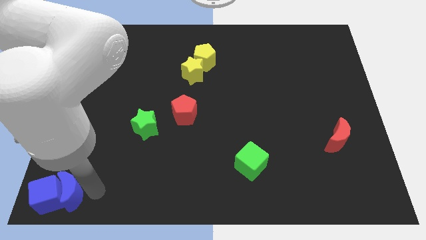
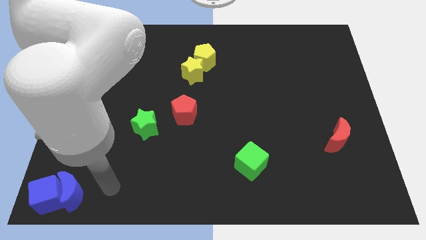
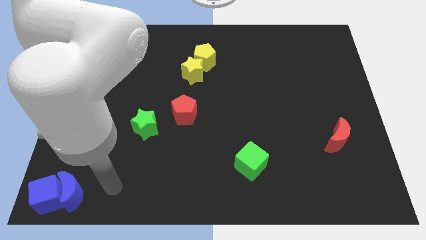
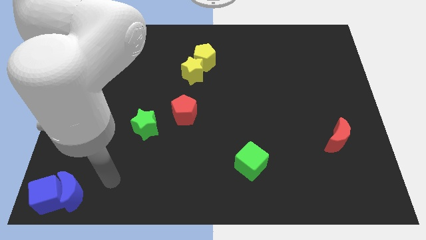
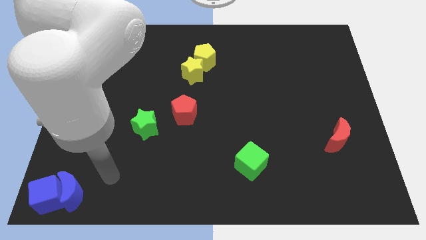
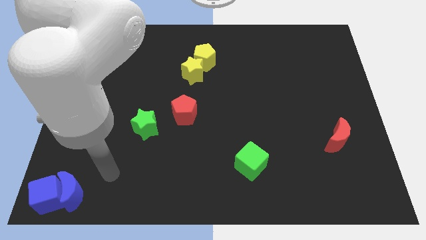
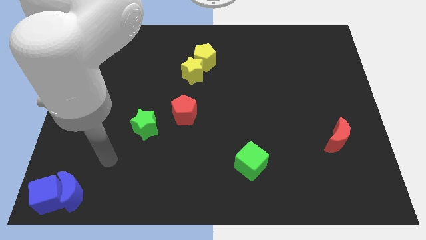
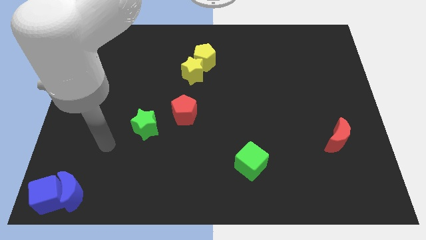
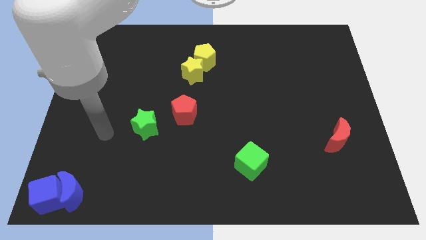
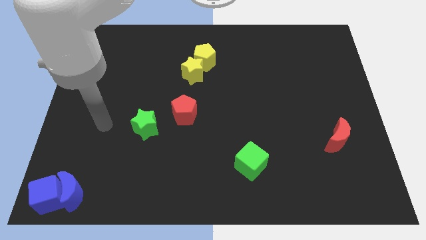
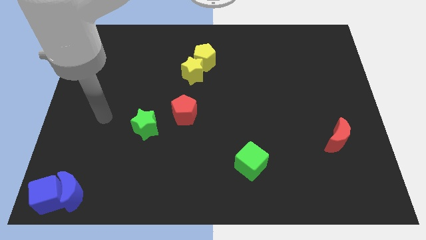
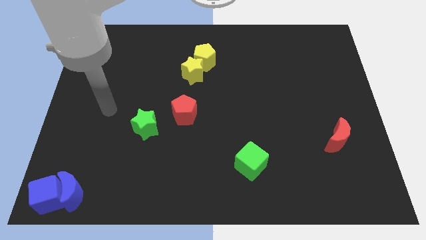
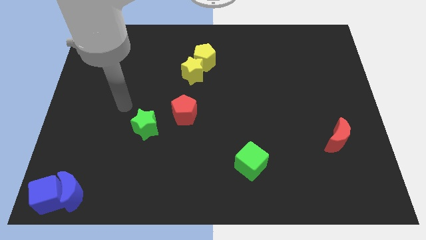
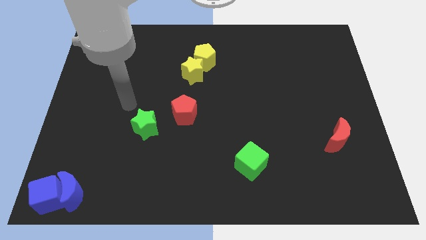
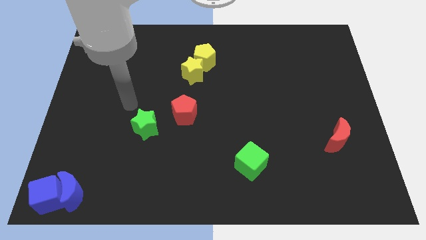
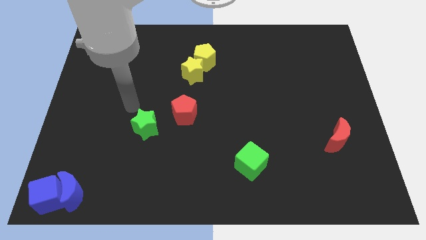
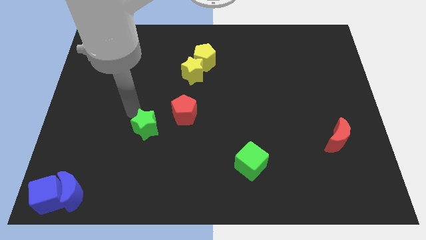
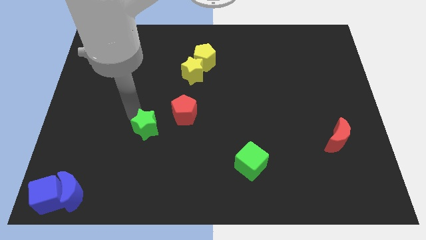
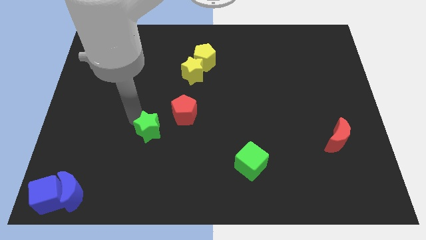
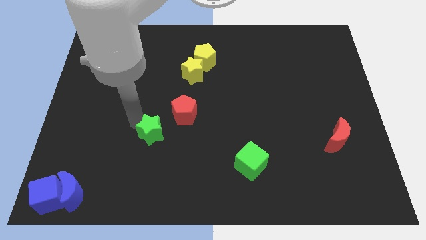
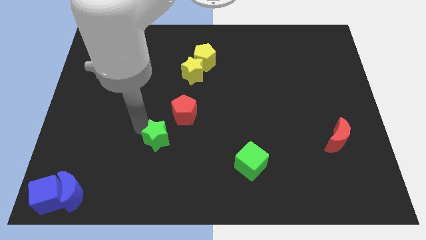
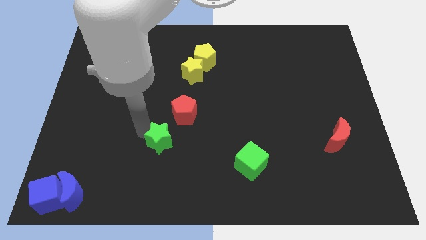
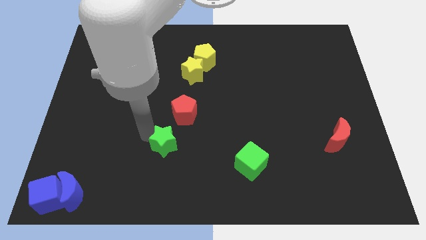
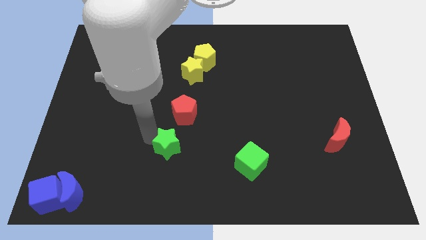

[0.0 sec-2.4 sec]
push the green star towards the bottom side

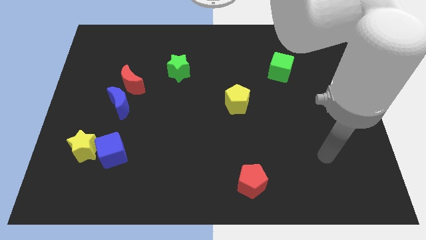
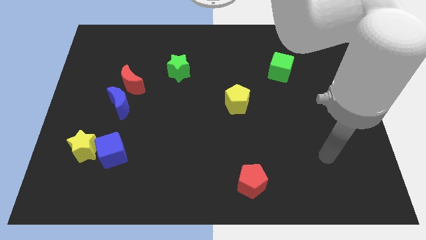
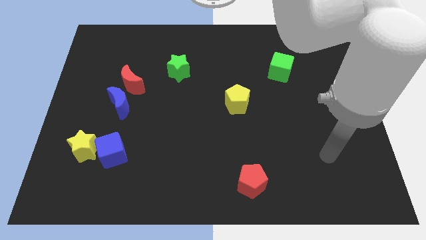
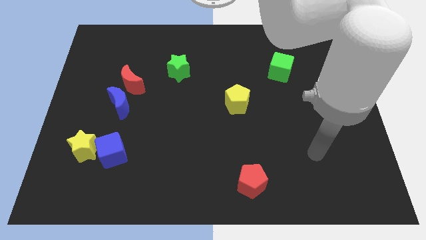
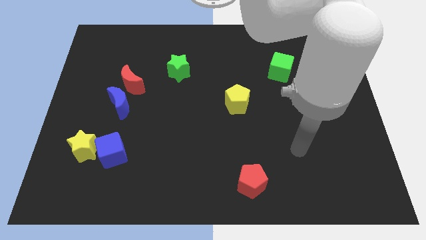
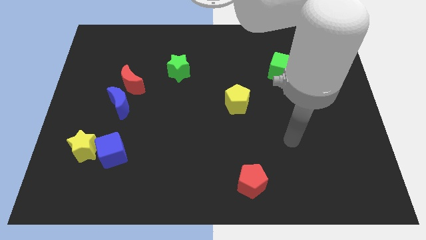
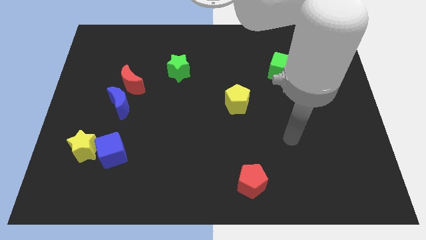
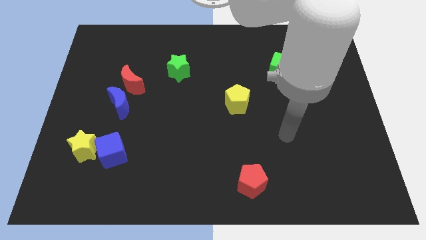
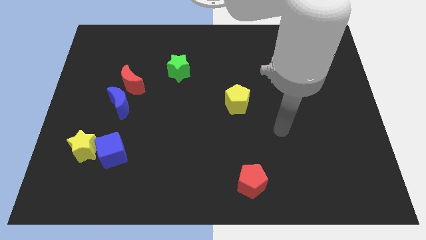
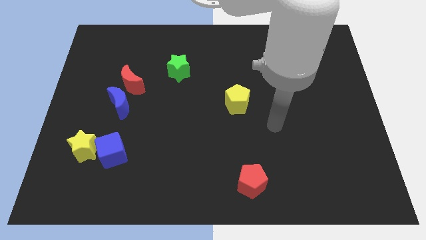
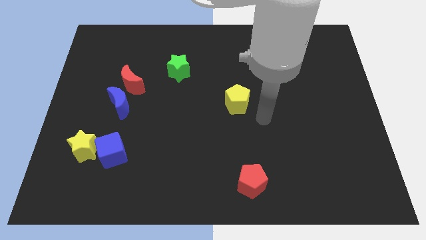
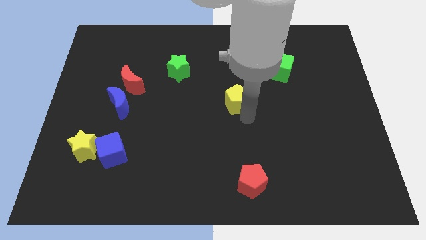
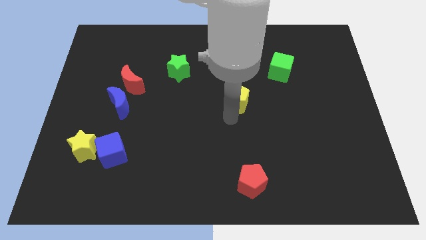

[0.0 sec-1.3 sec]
point your arm at the bottom side of the yellow pentagon

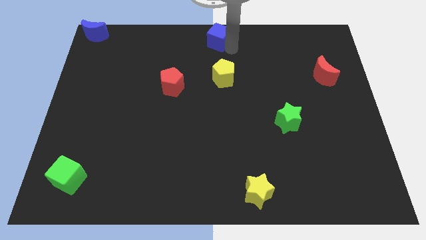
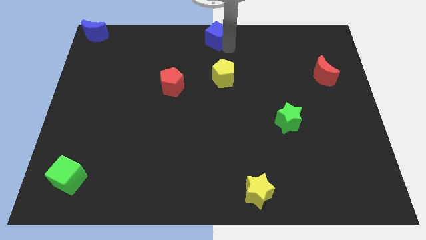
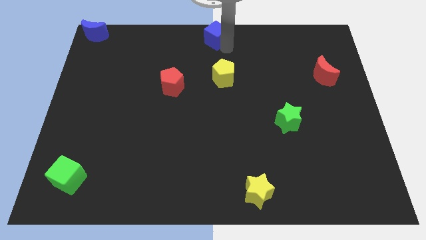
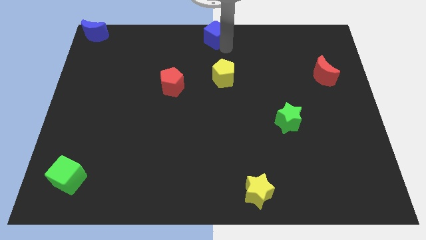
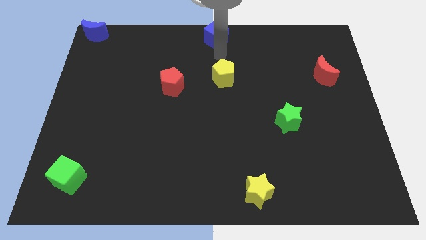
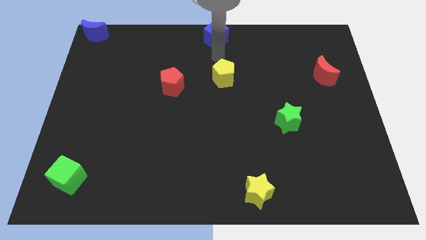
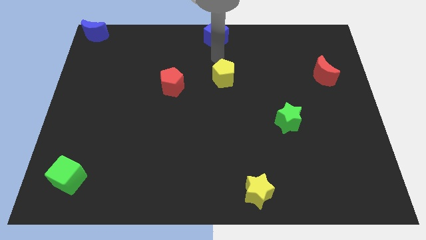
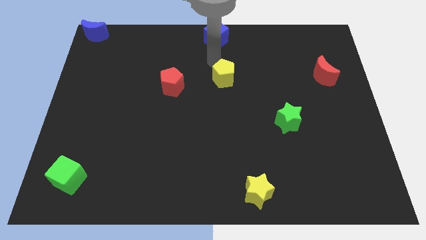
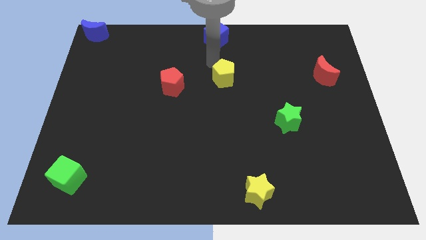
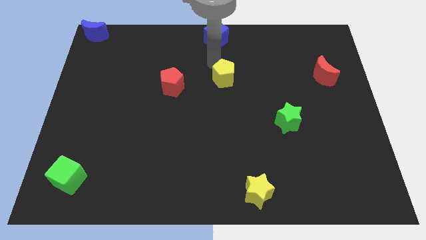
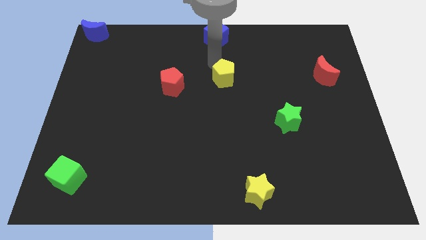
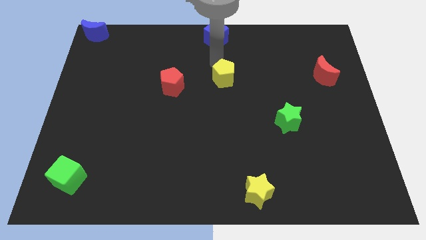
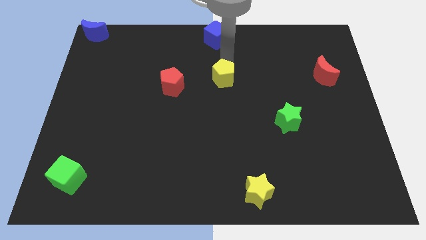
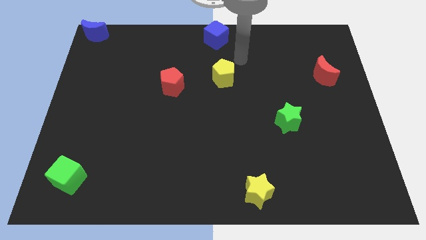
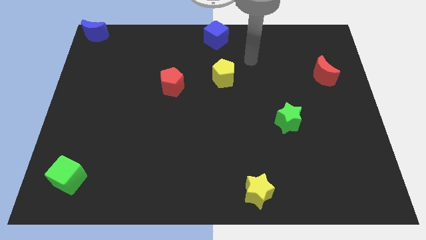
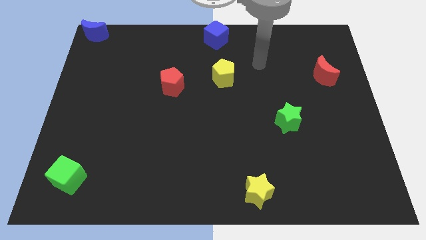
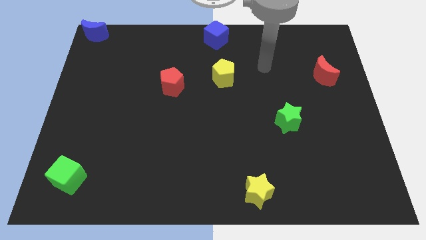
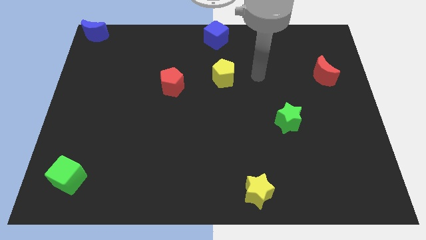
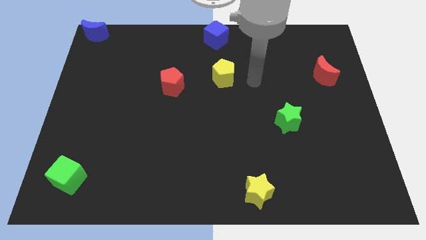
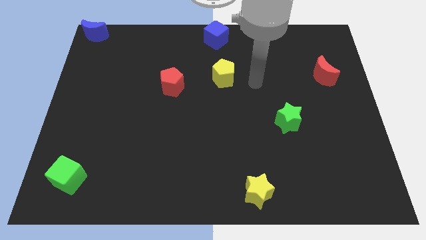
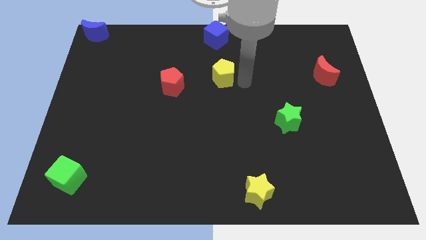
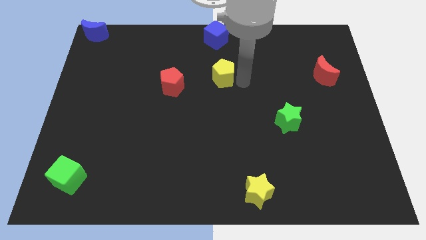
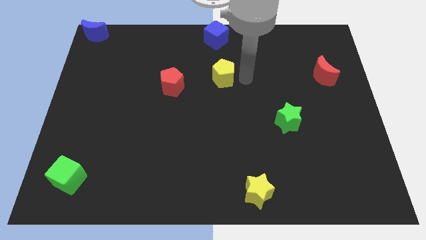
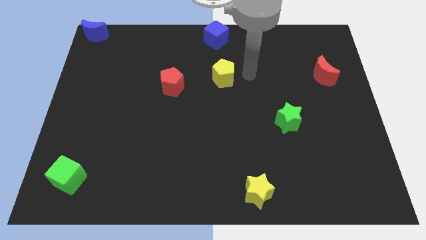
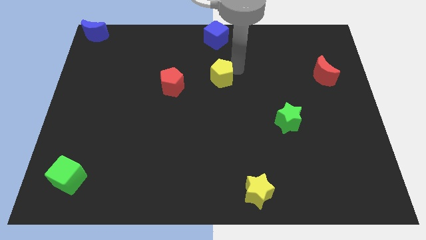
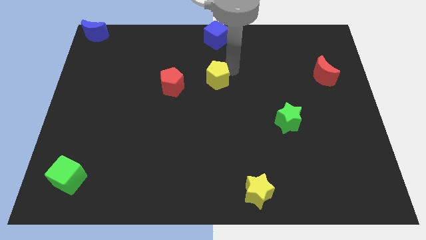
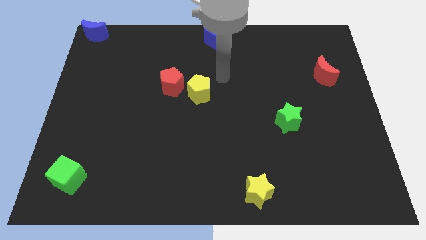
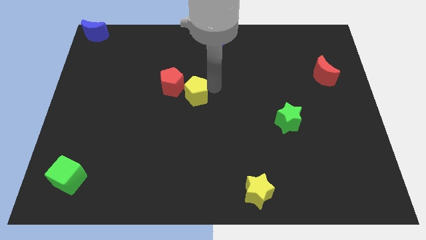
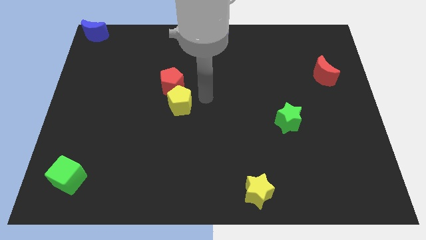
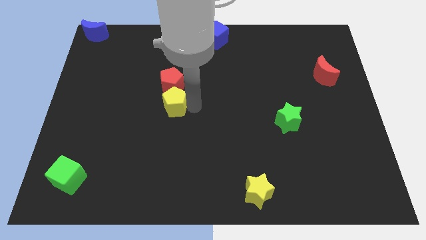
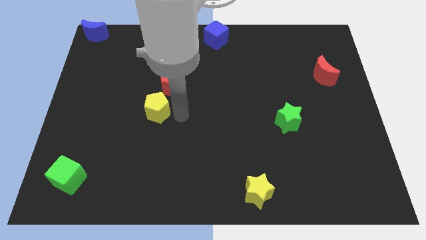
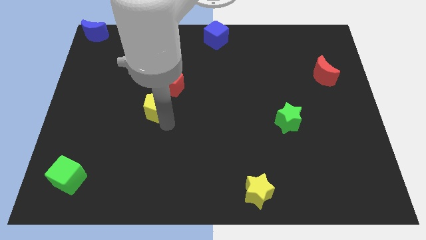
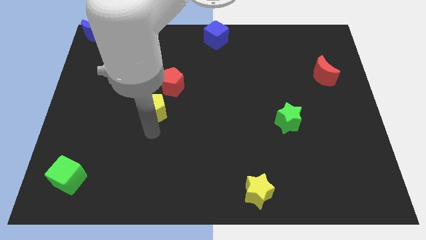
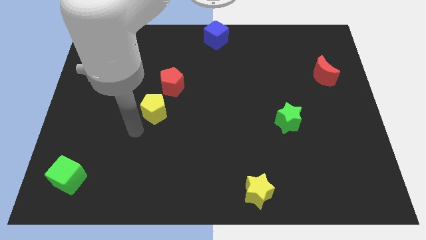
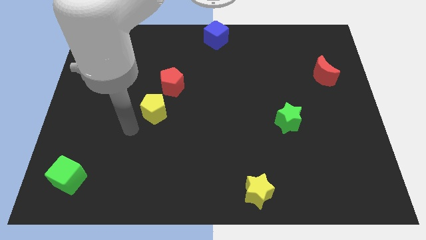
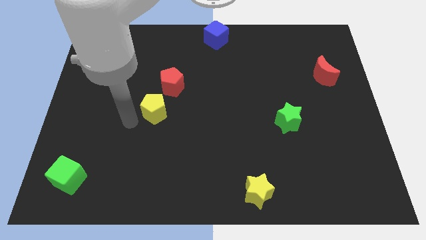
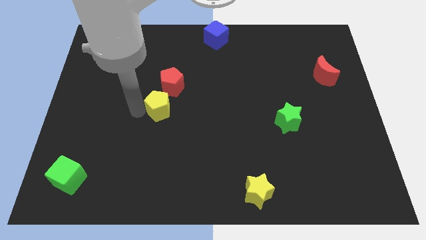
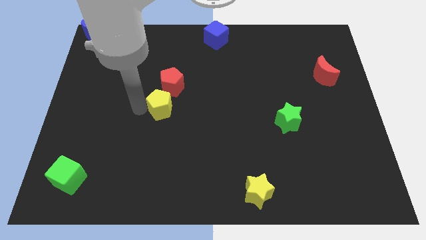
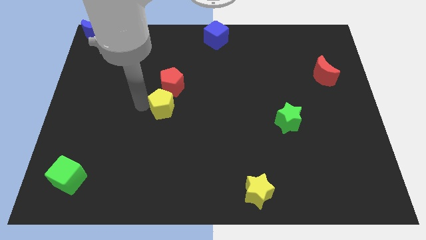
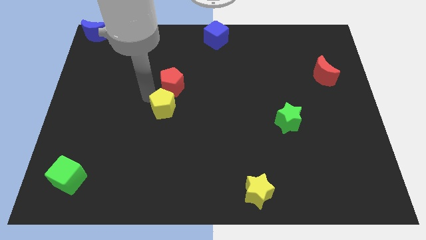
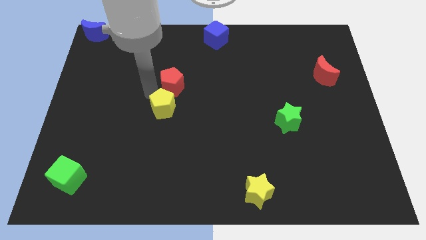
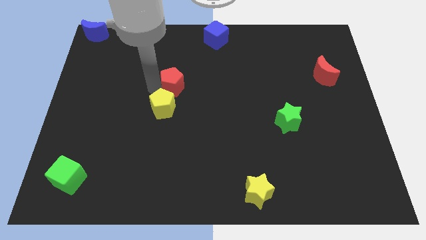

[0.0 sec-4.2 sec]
place the yellow pentagon below the red pentagon

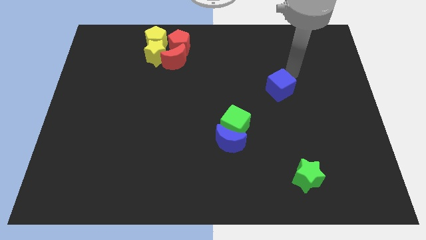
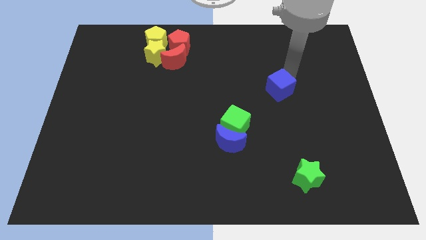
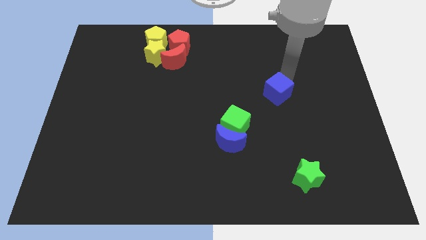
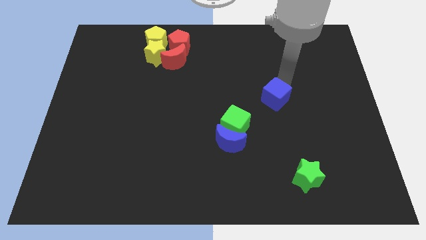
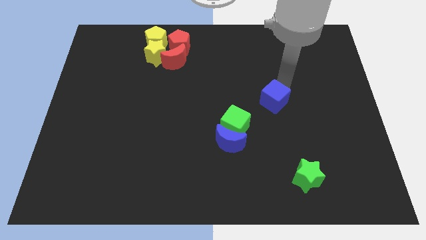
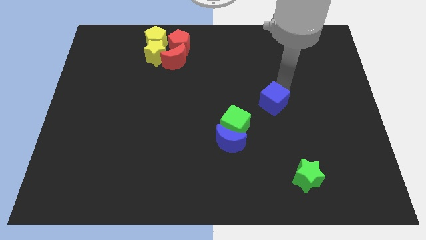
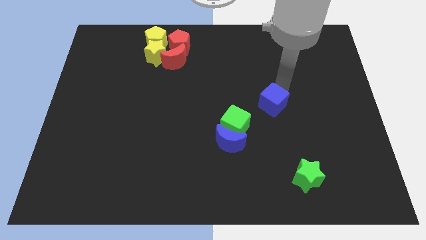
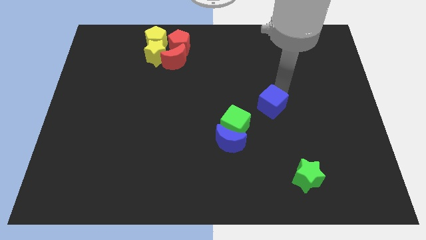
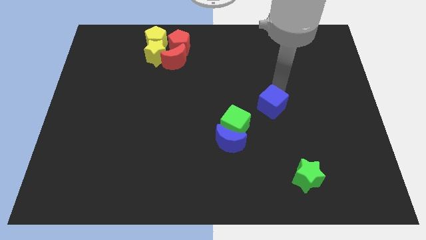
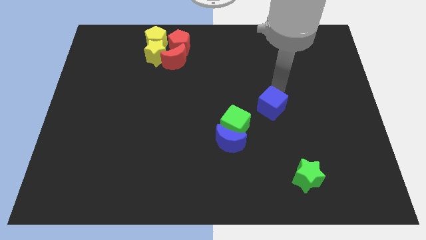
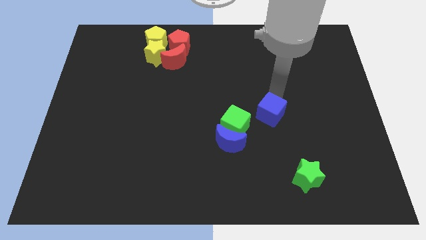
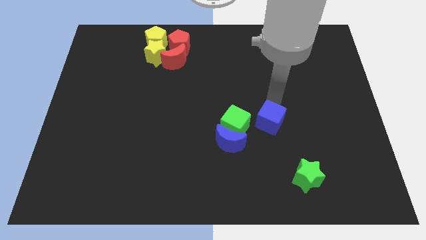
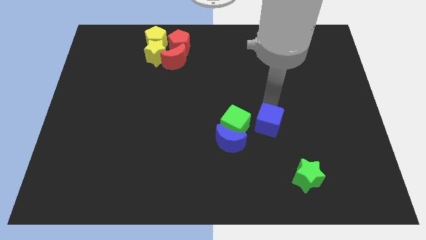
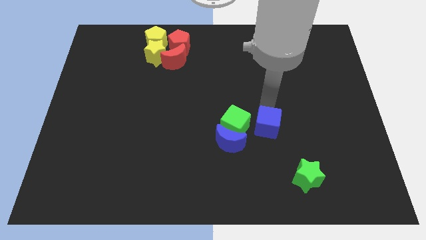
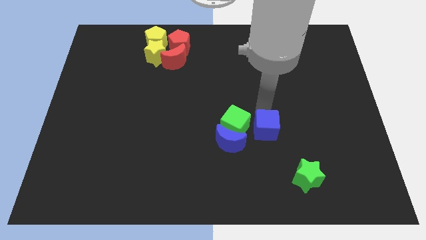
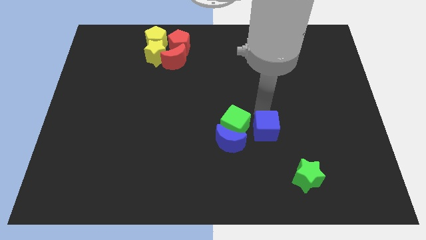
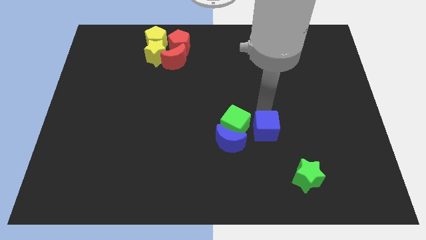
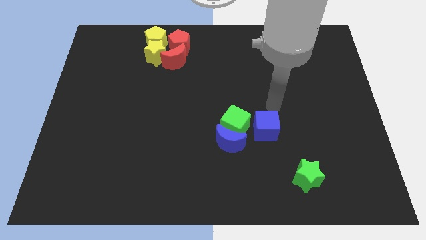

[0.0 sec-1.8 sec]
push the blue cube diagonally top left to the green star
